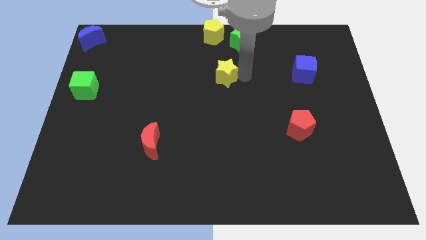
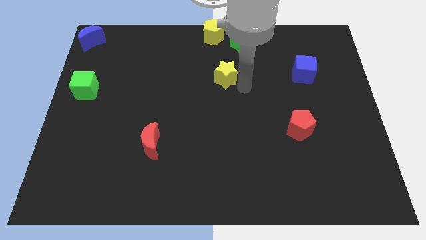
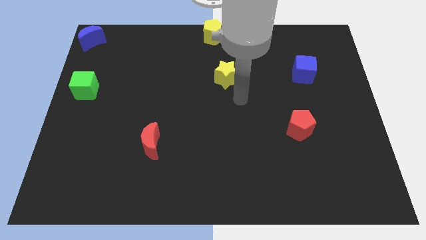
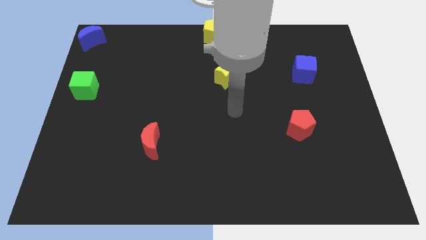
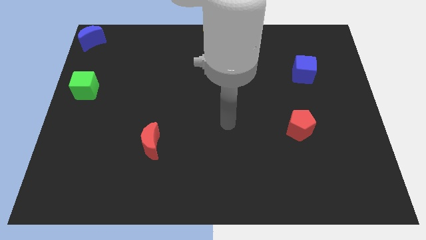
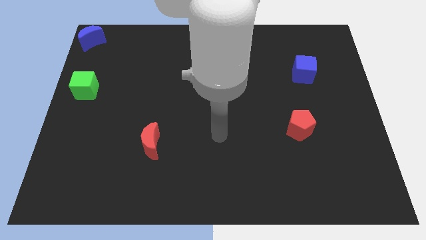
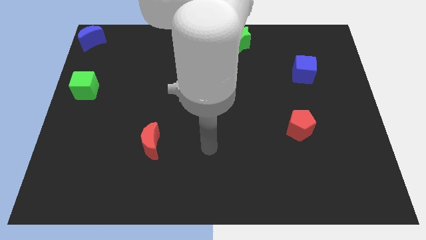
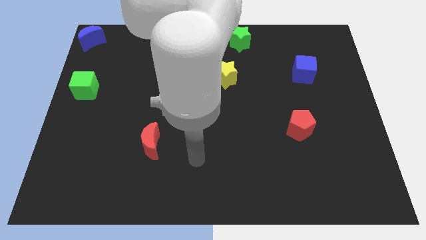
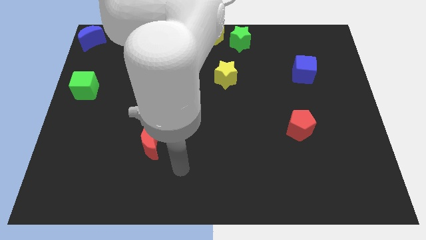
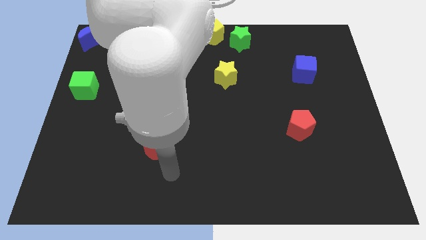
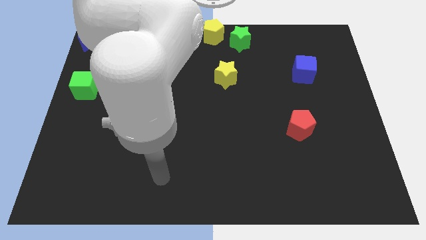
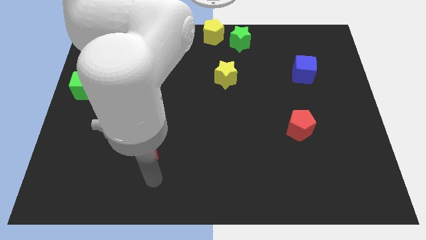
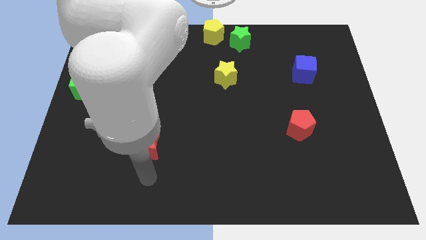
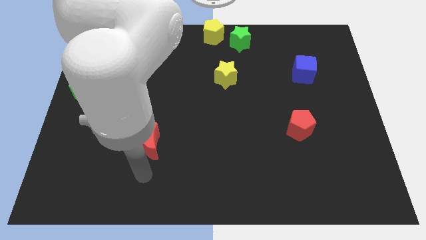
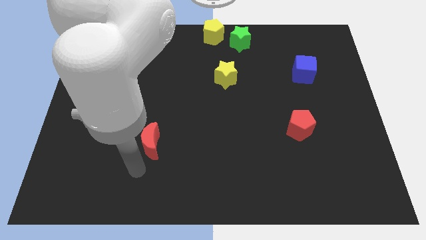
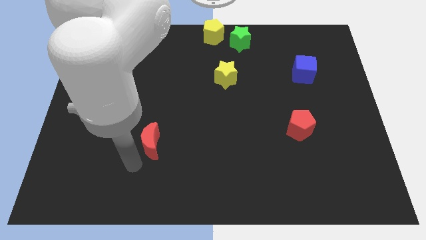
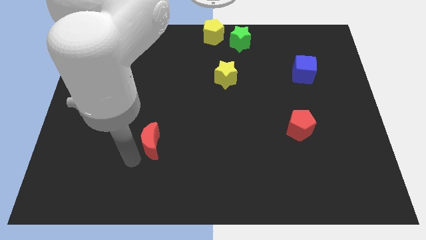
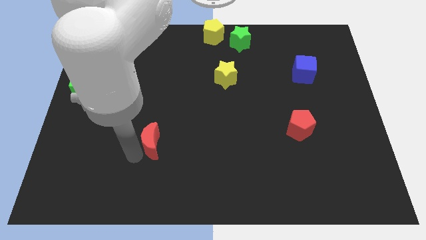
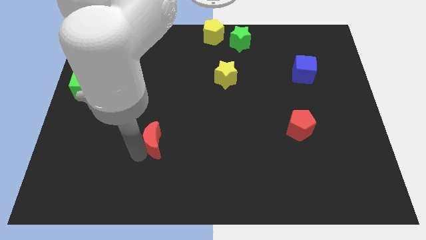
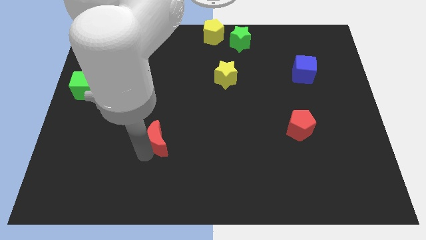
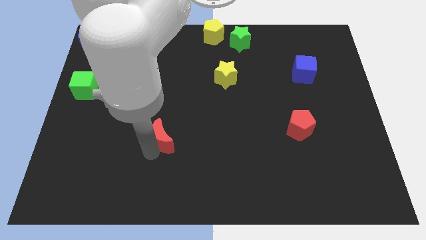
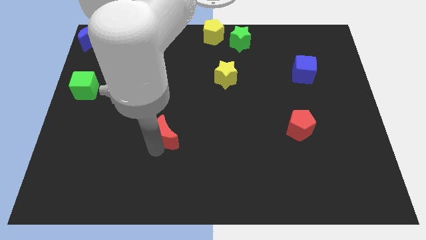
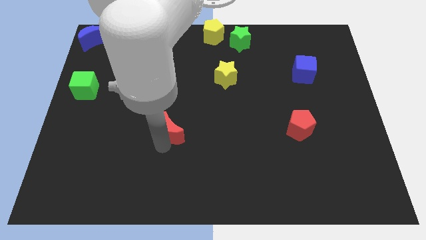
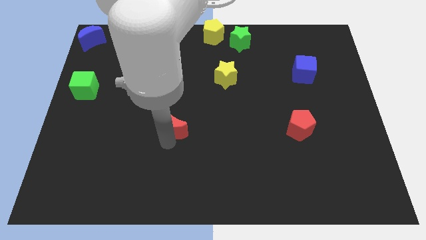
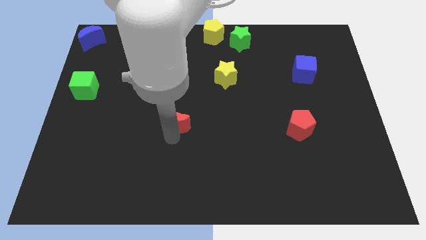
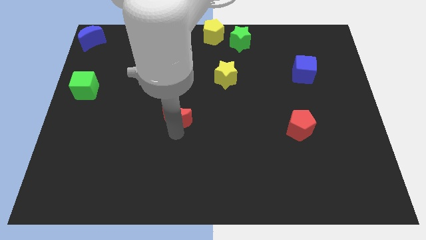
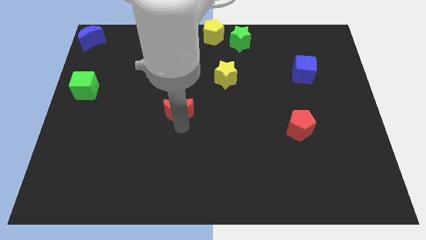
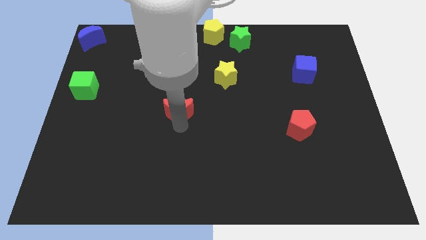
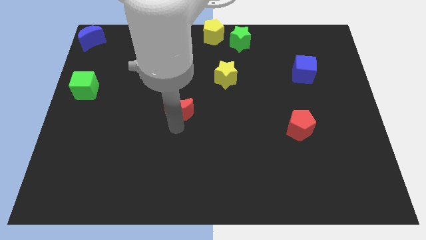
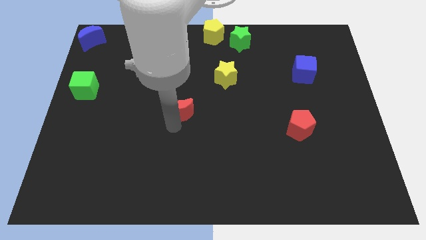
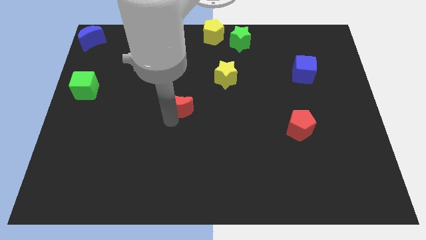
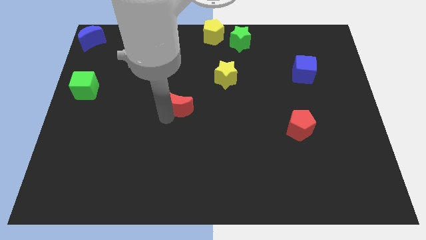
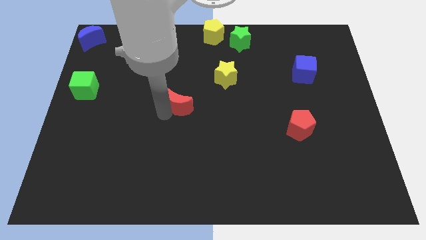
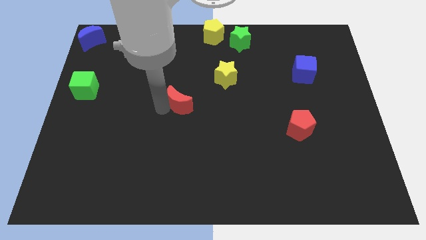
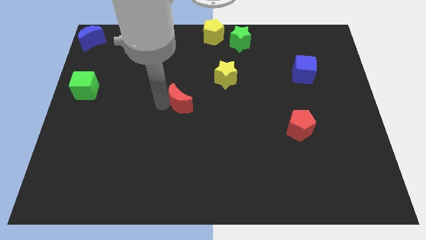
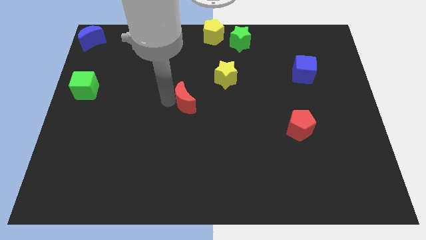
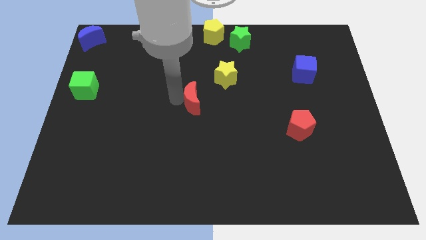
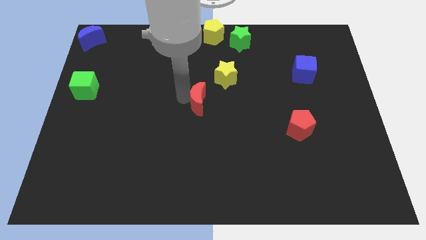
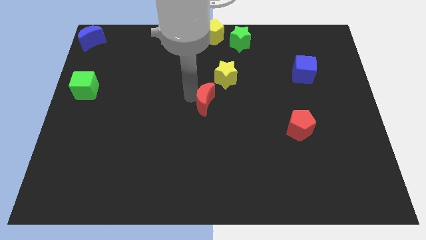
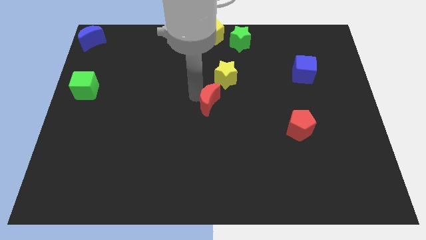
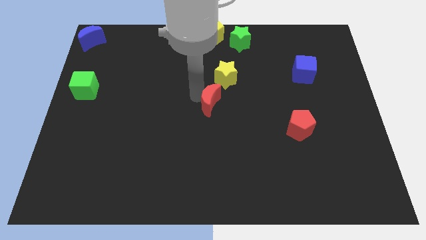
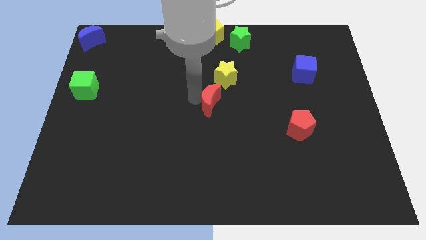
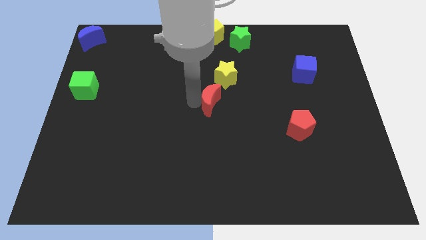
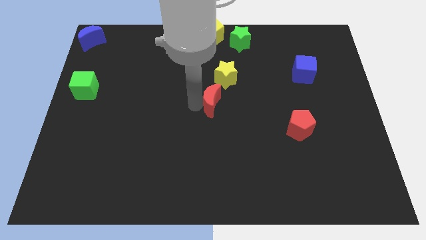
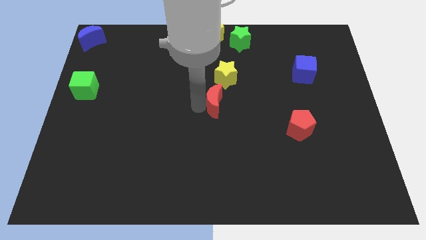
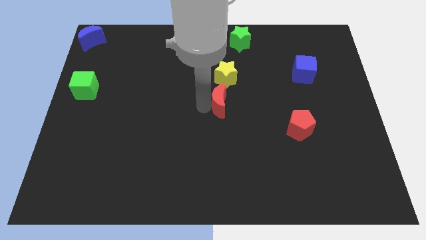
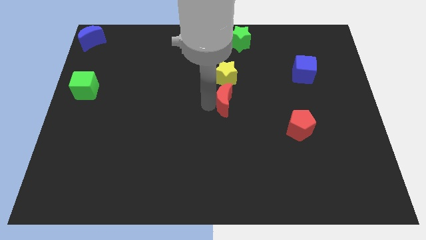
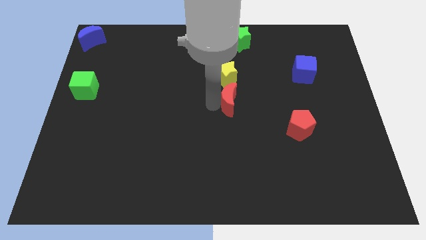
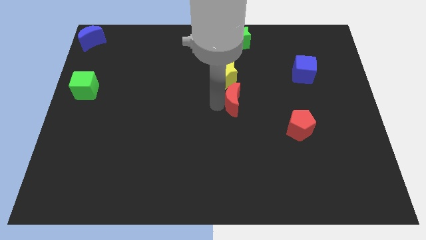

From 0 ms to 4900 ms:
place the red moon below the yellow star

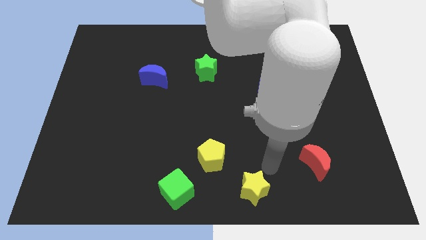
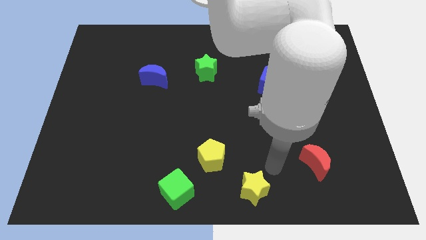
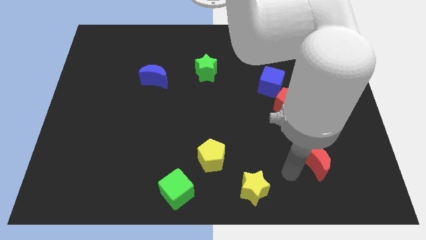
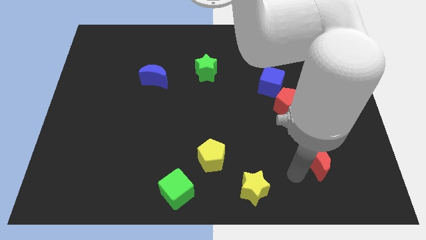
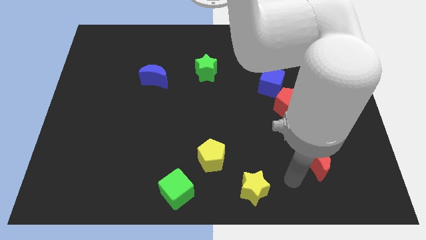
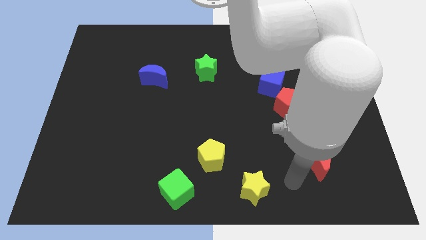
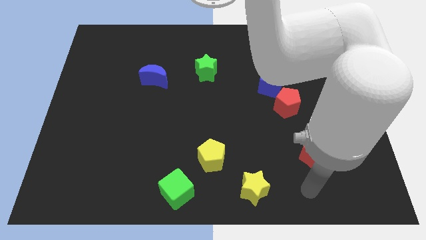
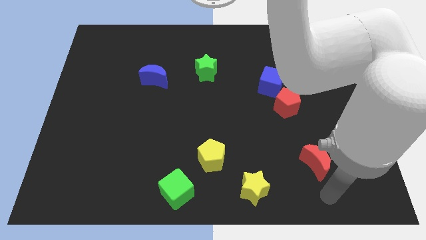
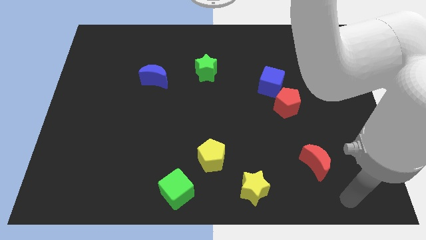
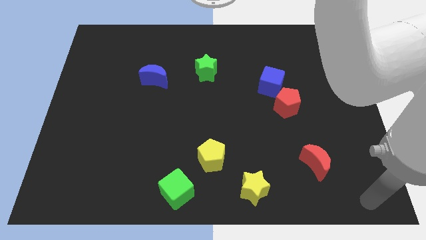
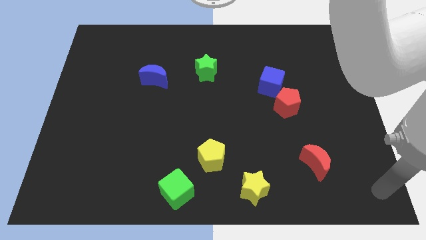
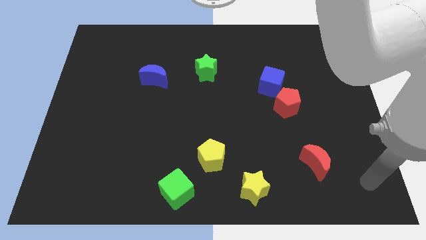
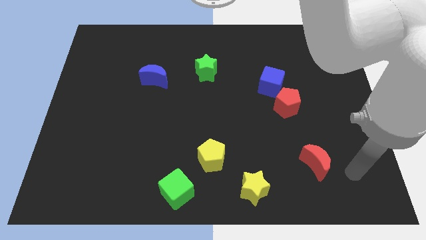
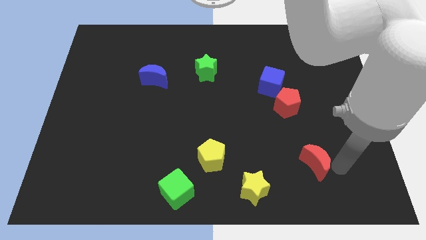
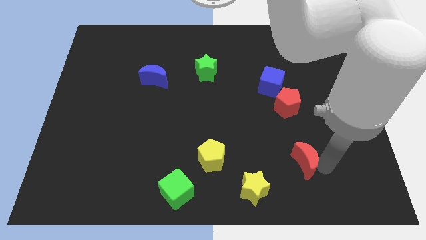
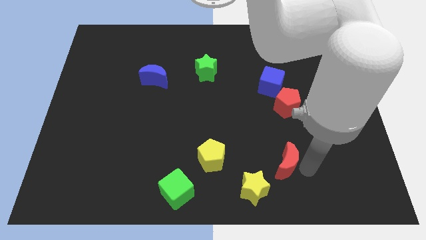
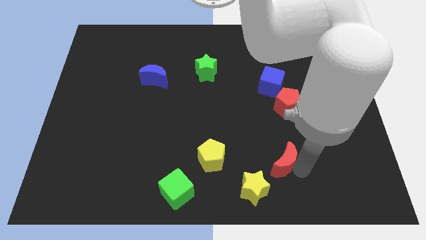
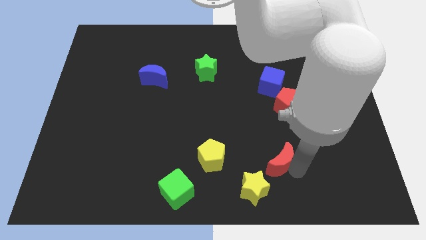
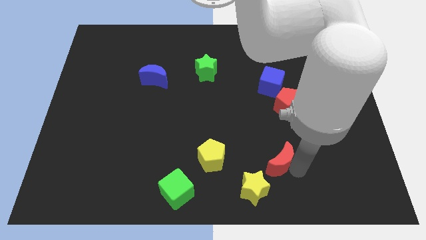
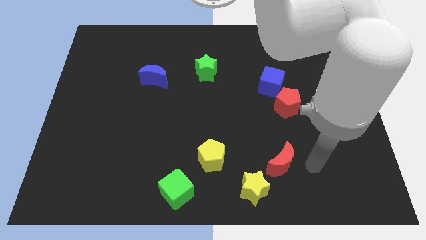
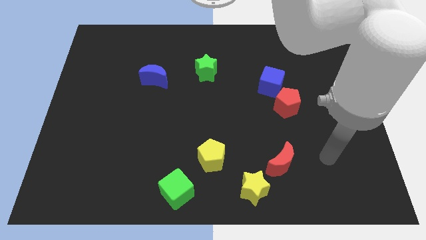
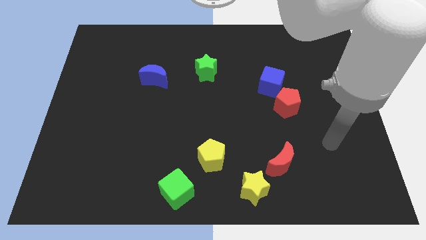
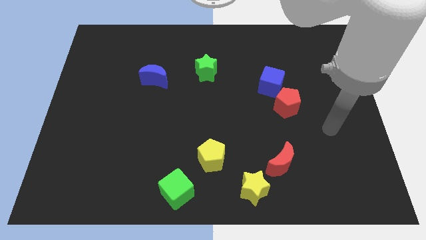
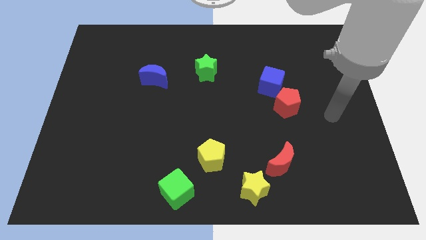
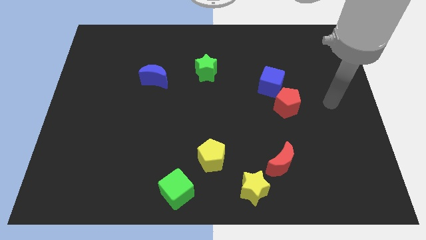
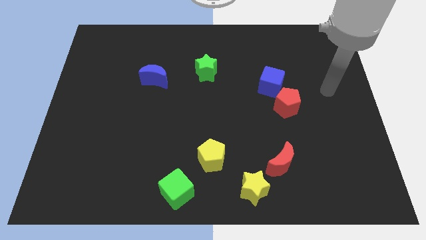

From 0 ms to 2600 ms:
push the red crescent adjacent to yellow star

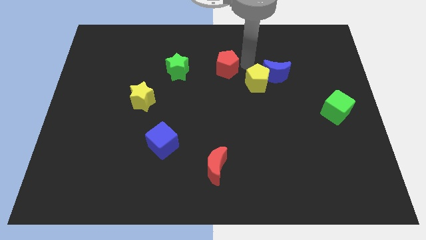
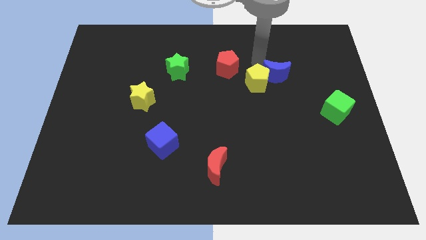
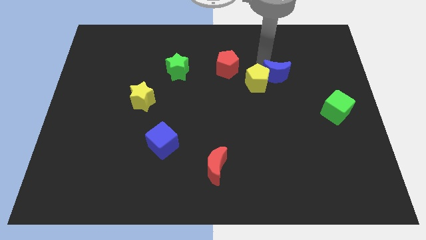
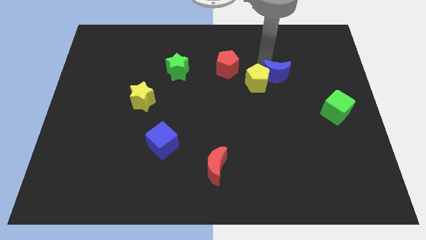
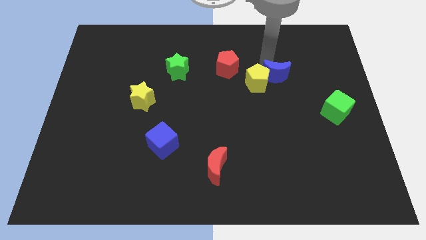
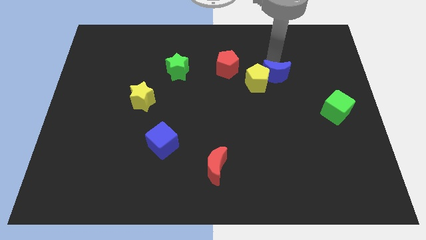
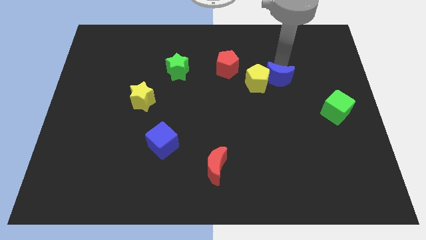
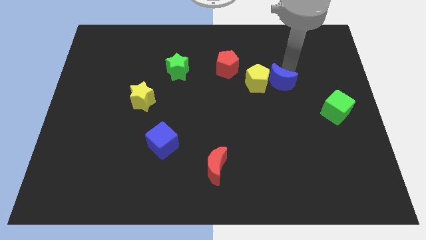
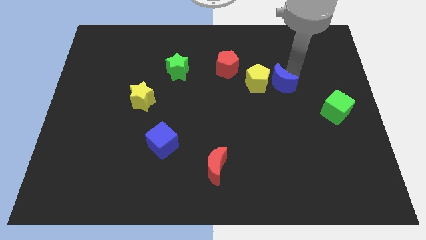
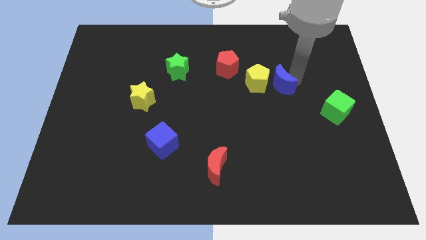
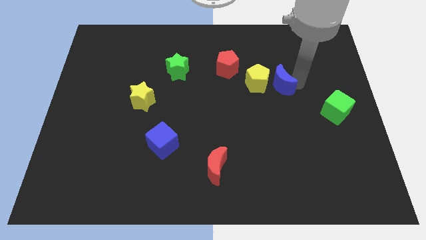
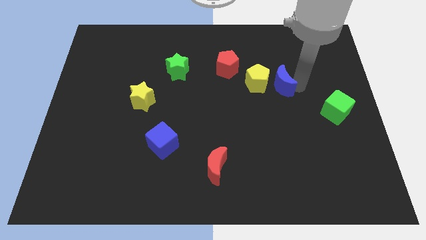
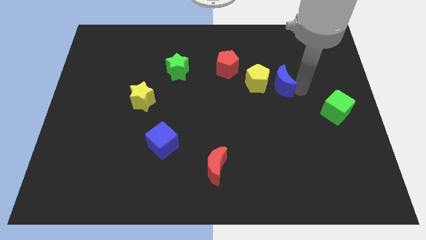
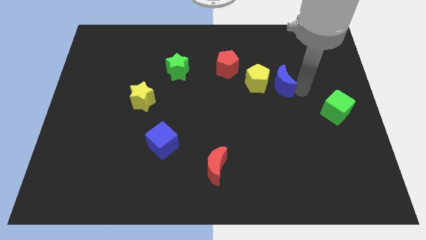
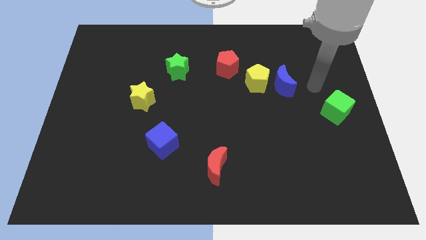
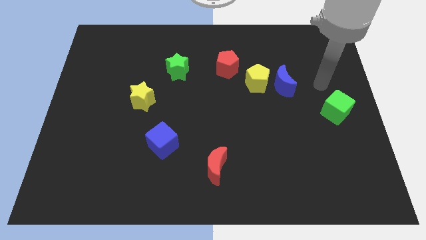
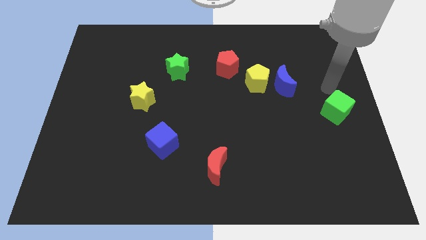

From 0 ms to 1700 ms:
move the blue moon to the right of the yellow pentagon
